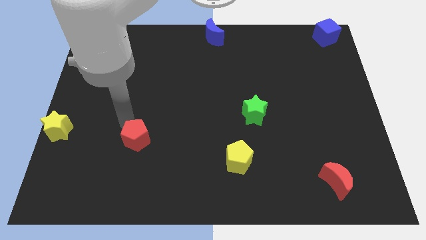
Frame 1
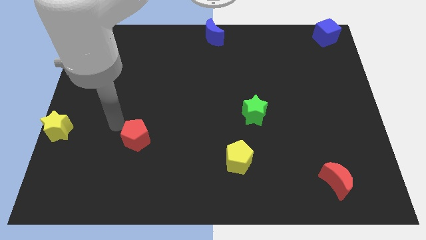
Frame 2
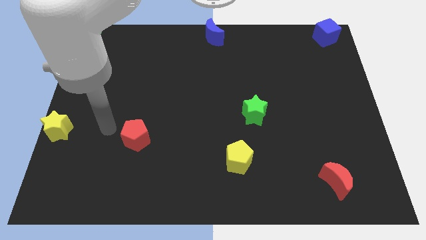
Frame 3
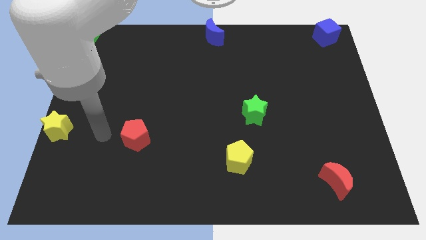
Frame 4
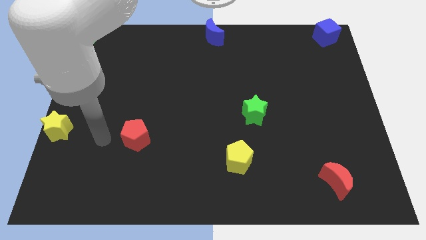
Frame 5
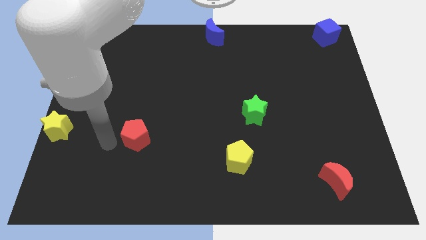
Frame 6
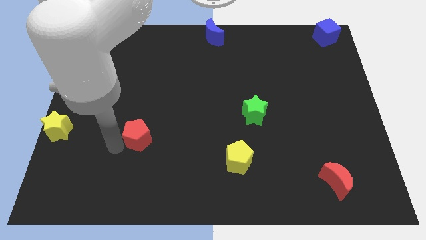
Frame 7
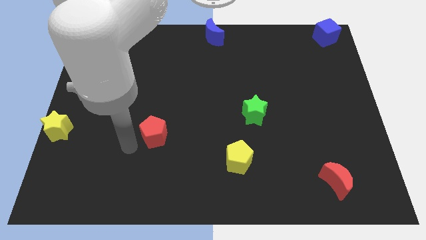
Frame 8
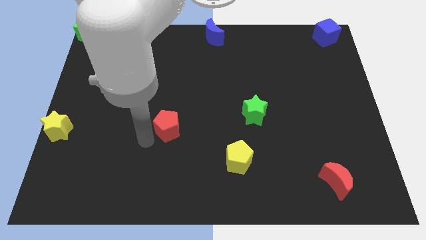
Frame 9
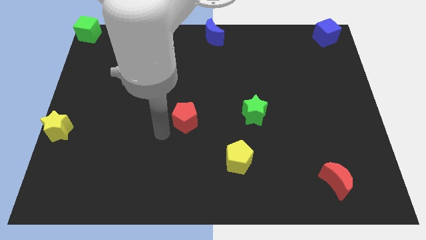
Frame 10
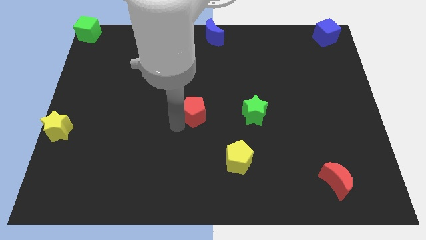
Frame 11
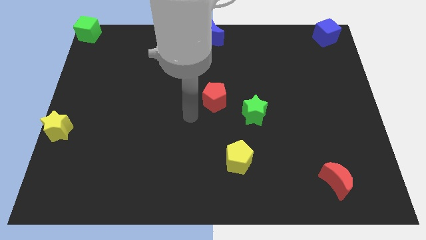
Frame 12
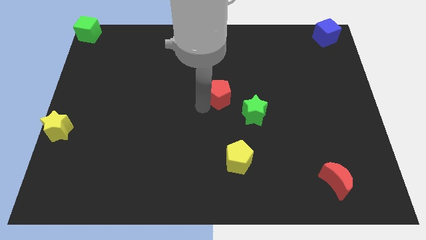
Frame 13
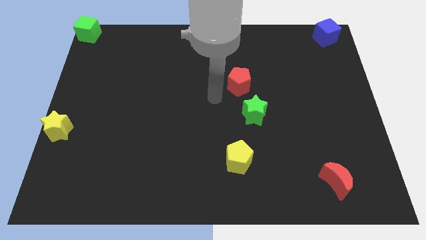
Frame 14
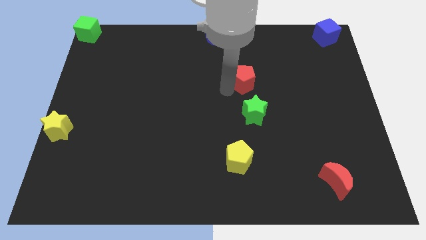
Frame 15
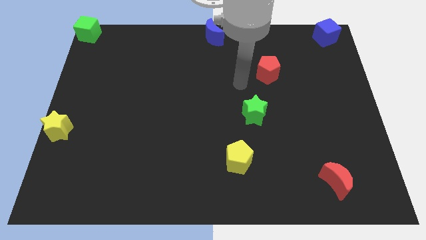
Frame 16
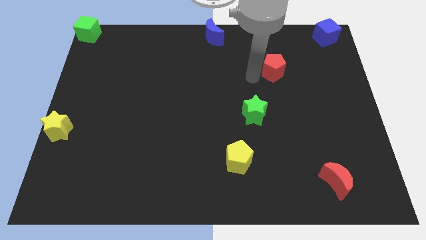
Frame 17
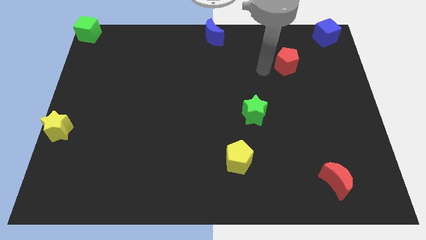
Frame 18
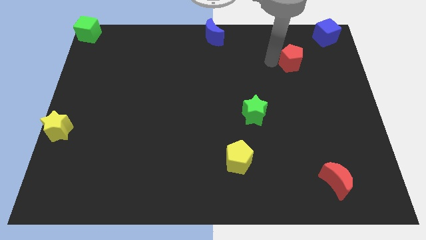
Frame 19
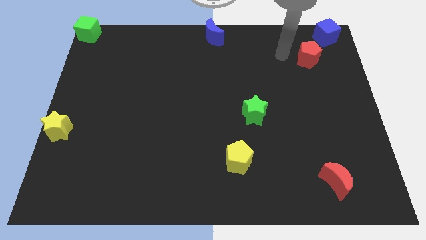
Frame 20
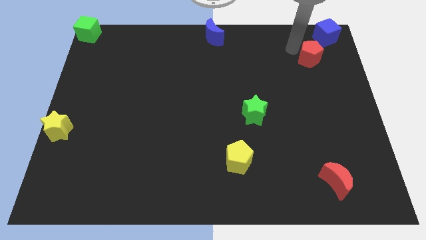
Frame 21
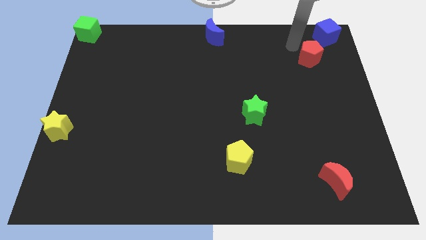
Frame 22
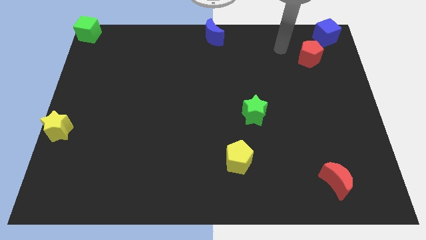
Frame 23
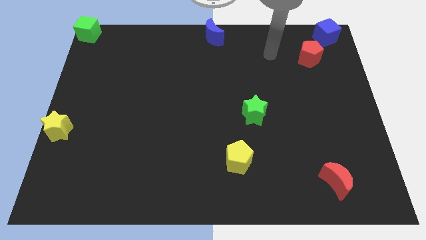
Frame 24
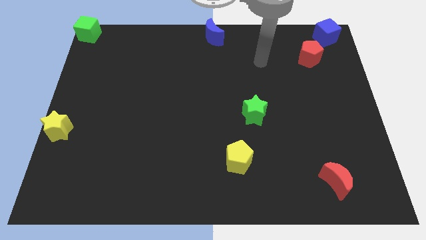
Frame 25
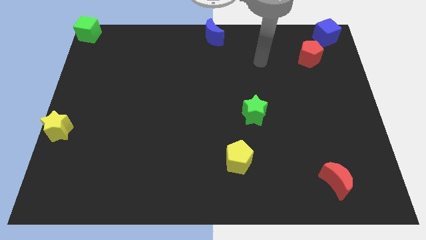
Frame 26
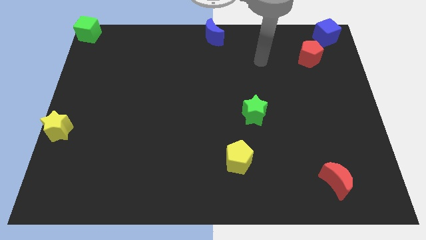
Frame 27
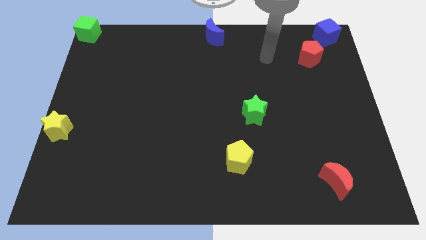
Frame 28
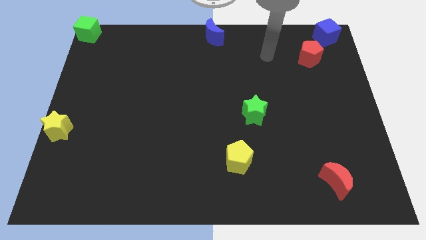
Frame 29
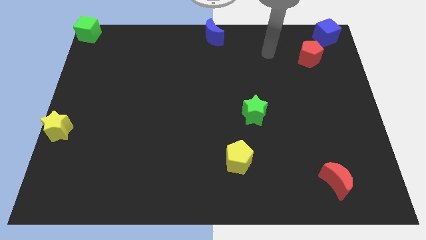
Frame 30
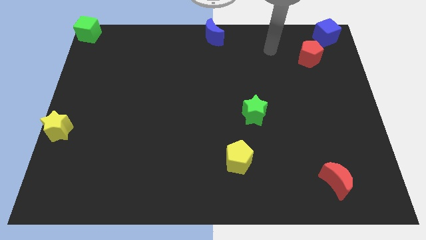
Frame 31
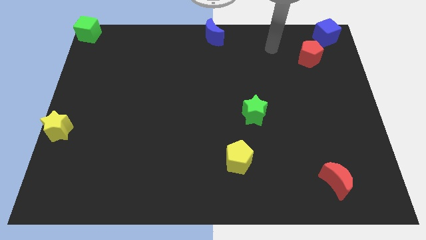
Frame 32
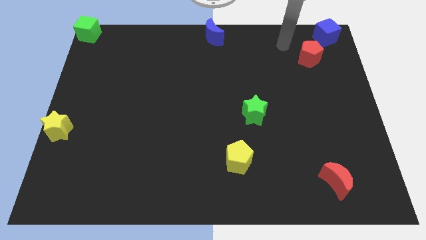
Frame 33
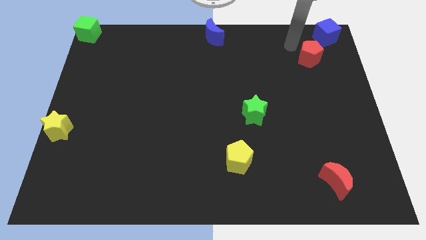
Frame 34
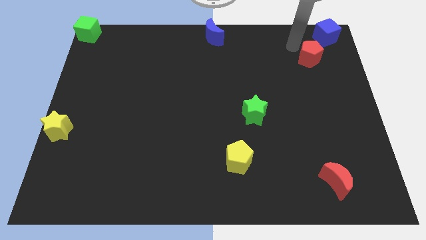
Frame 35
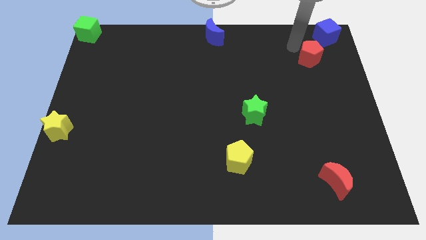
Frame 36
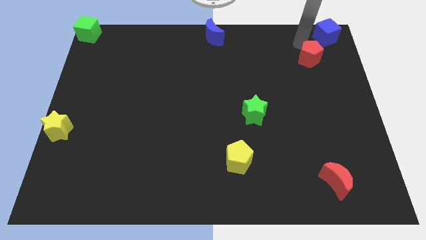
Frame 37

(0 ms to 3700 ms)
move the red pentagon towards the blue cube

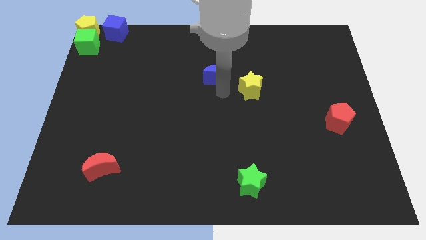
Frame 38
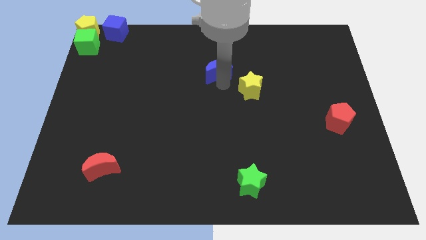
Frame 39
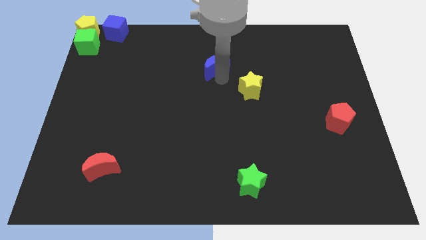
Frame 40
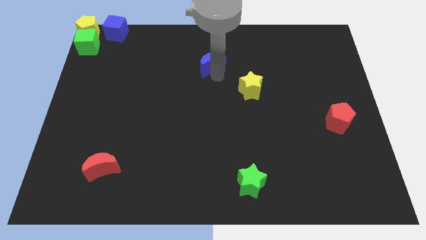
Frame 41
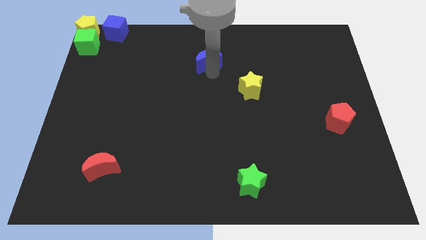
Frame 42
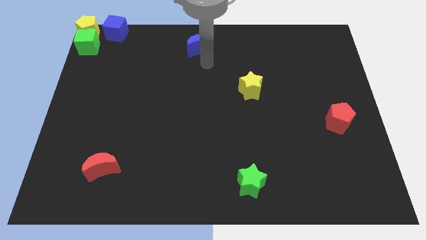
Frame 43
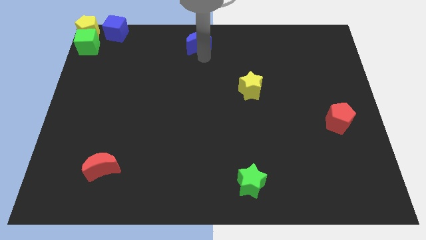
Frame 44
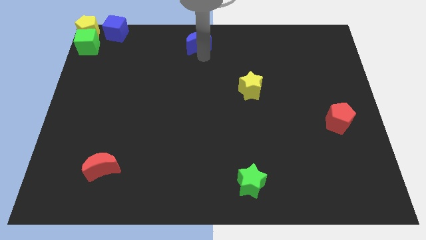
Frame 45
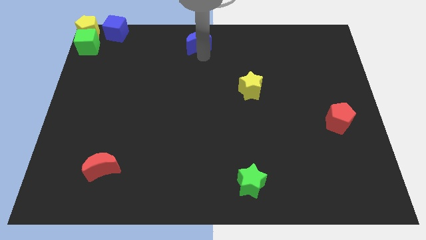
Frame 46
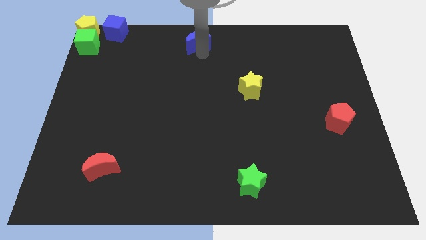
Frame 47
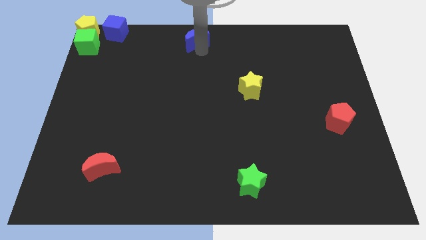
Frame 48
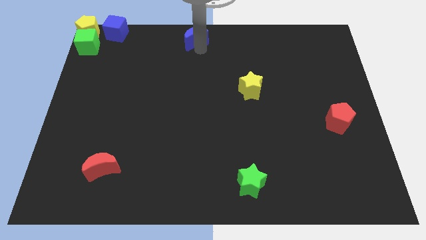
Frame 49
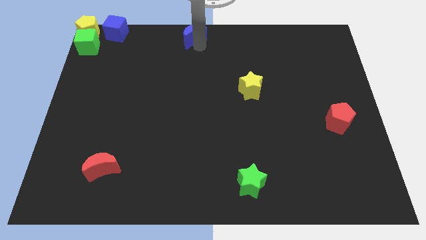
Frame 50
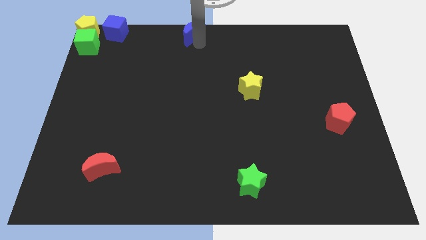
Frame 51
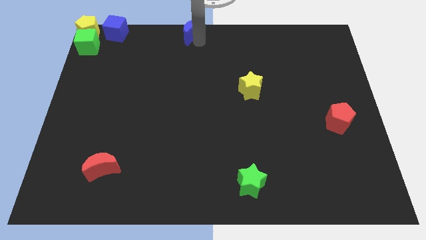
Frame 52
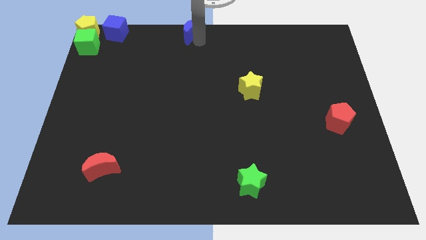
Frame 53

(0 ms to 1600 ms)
place the blue crescent horizontally to the right side of the blue cube

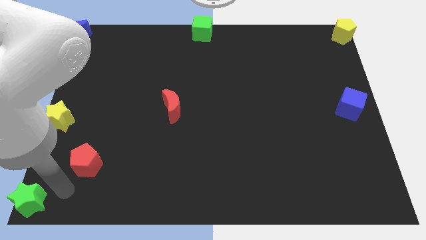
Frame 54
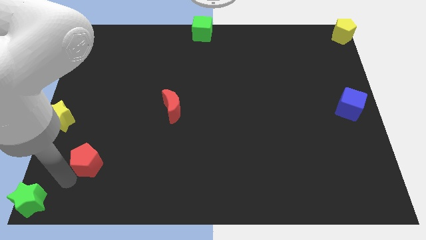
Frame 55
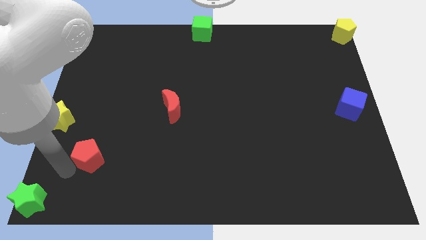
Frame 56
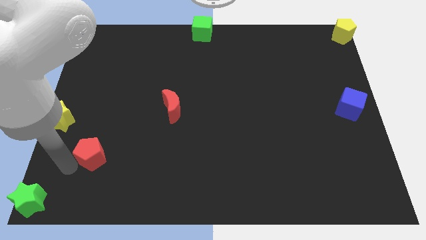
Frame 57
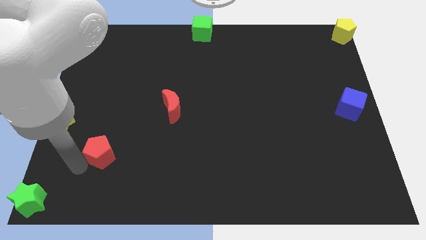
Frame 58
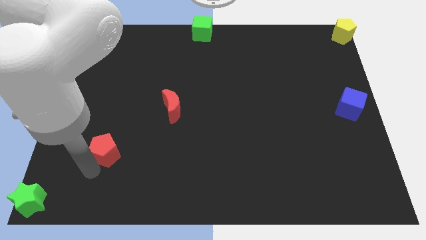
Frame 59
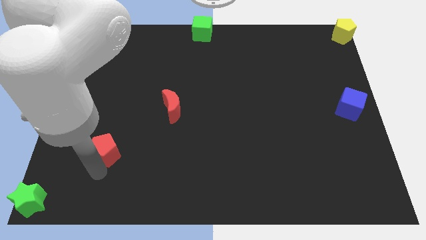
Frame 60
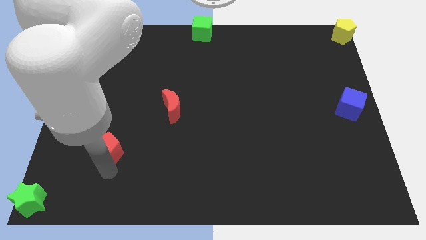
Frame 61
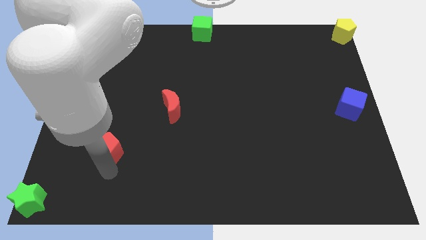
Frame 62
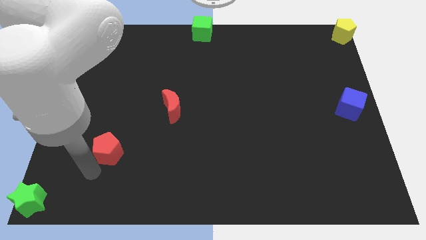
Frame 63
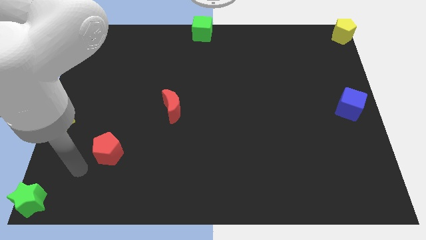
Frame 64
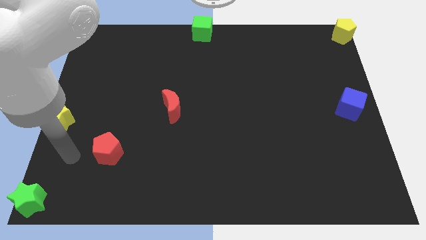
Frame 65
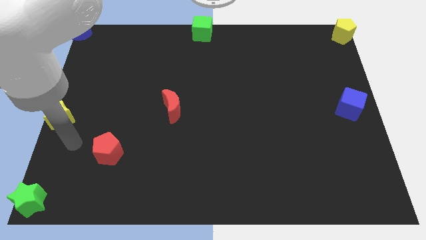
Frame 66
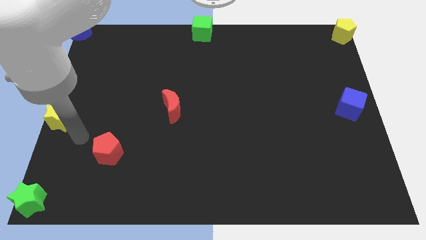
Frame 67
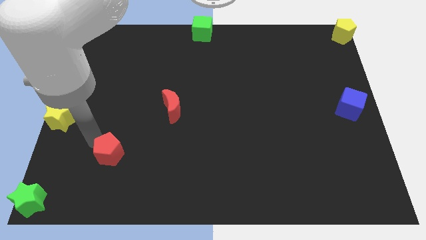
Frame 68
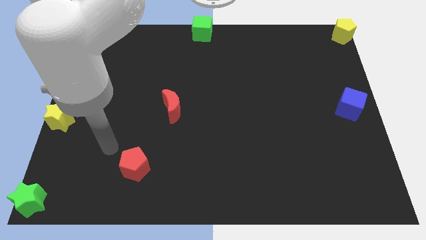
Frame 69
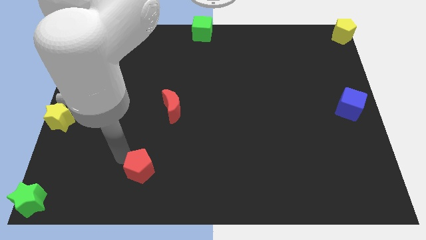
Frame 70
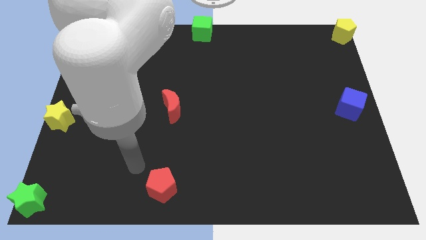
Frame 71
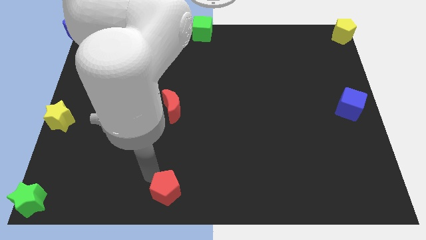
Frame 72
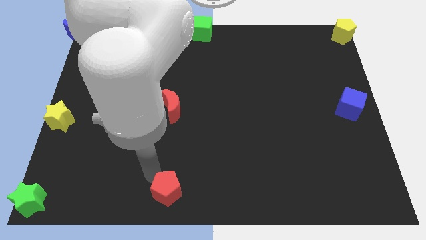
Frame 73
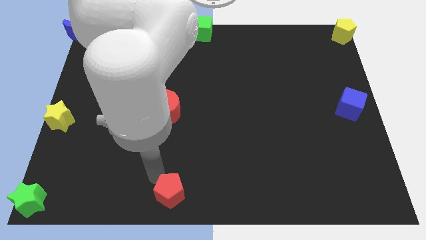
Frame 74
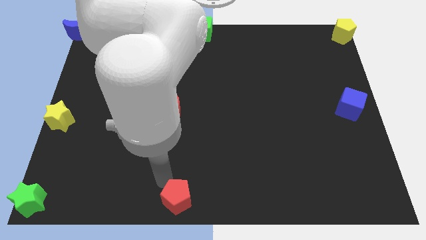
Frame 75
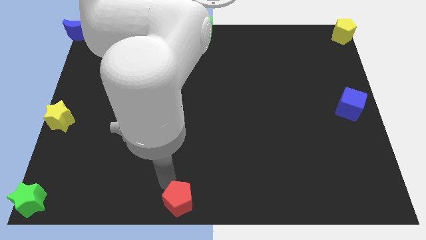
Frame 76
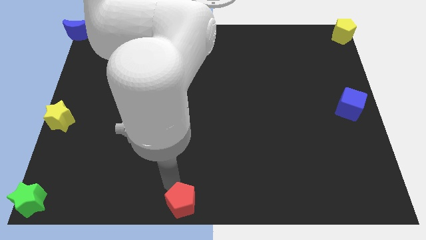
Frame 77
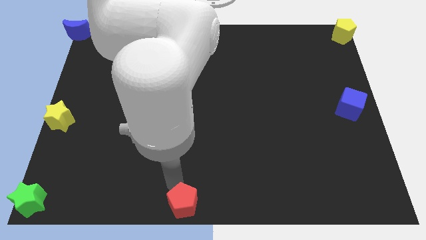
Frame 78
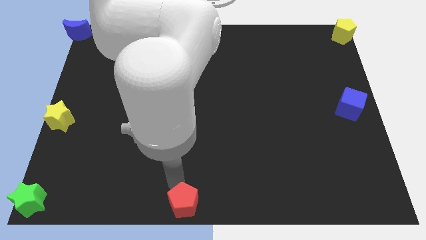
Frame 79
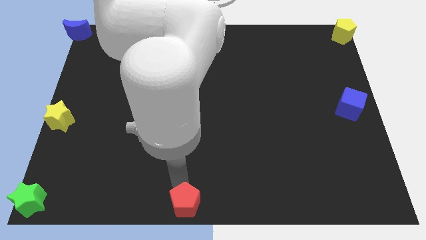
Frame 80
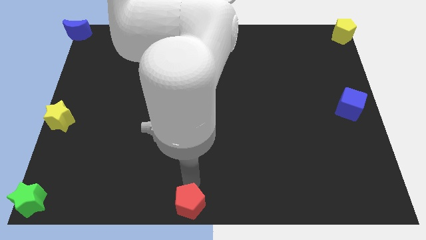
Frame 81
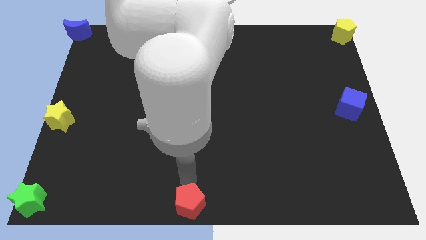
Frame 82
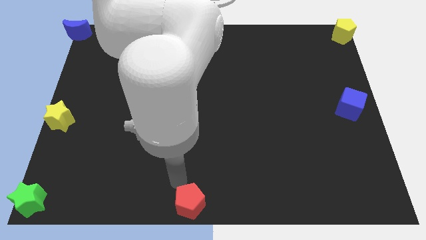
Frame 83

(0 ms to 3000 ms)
push the red pentagon to the bottom center of the board

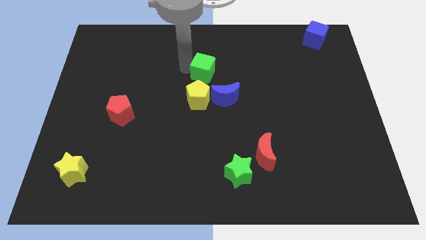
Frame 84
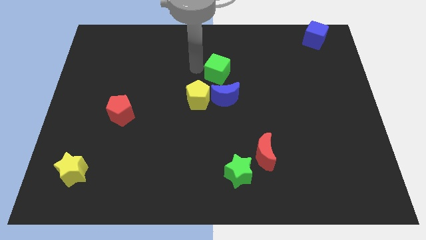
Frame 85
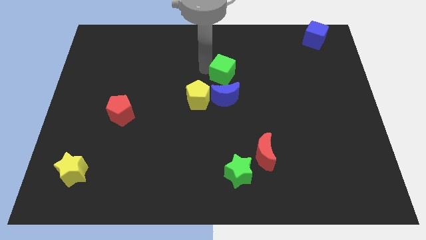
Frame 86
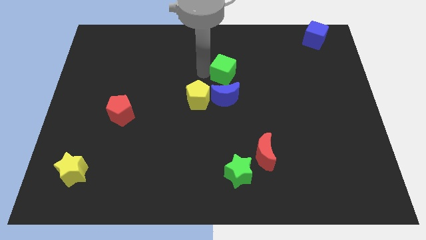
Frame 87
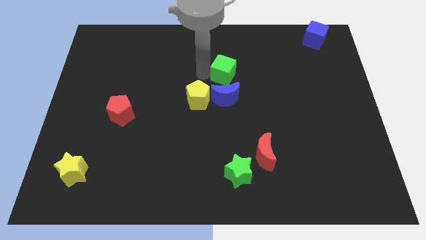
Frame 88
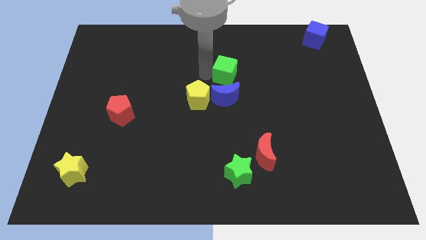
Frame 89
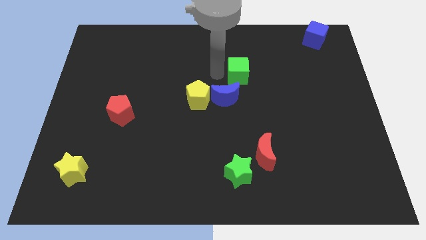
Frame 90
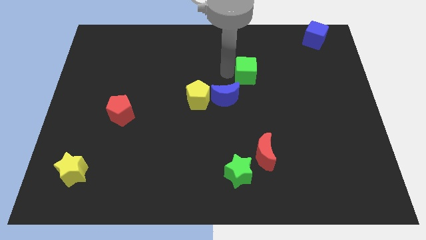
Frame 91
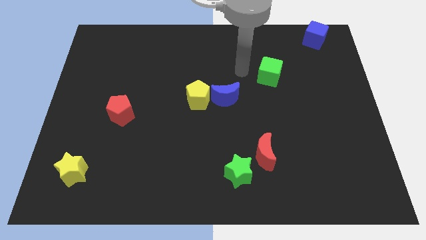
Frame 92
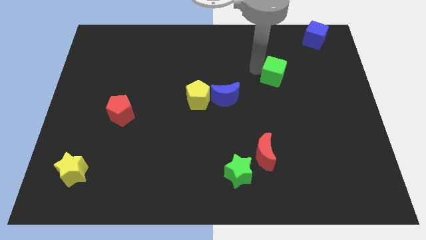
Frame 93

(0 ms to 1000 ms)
move green cube in between blue cubes
